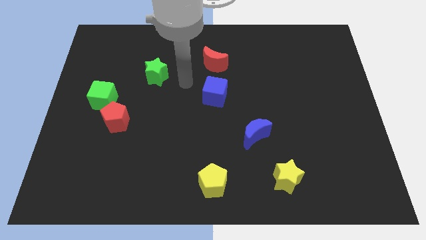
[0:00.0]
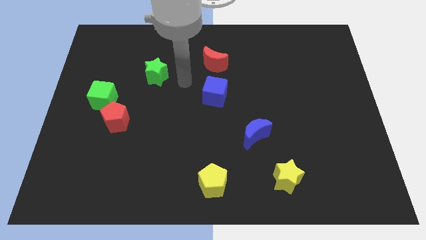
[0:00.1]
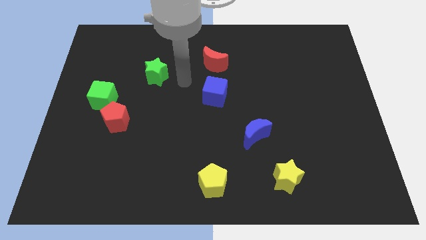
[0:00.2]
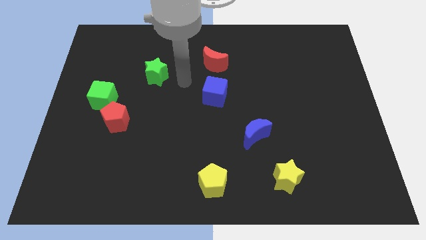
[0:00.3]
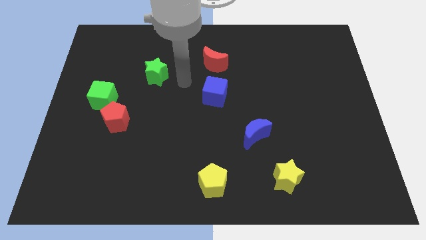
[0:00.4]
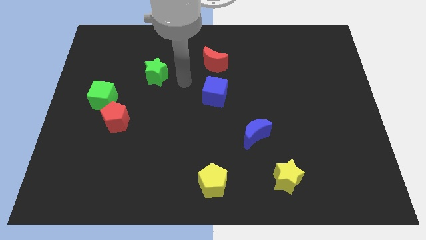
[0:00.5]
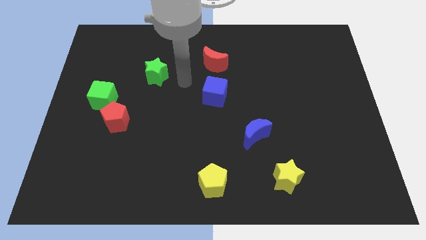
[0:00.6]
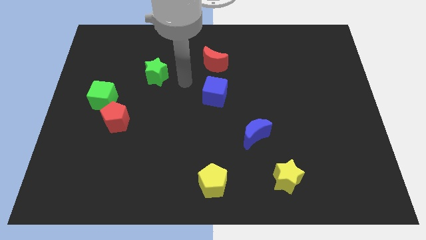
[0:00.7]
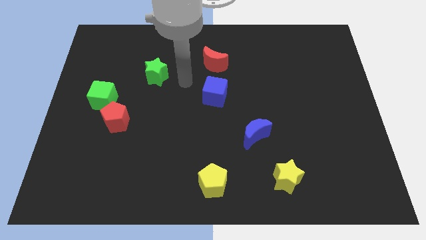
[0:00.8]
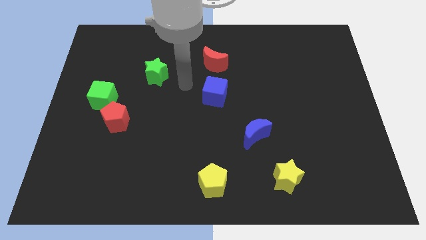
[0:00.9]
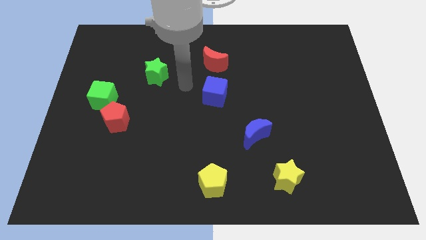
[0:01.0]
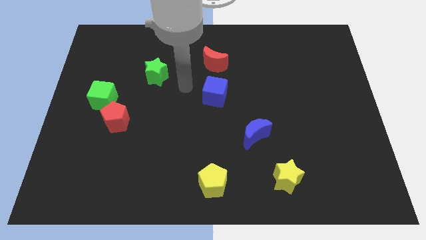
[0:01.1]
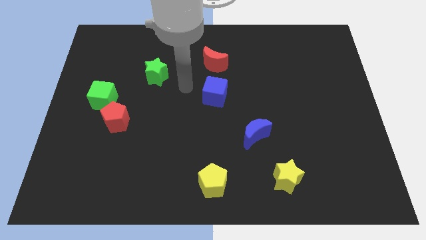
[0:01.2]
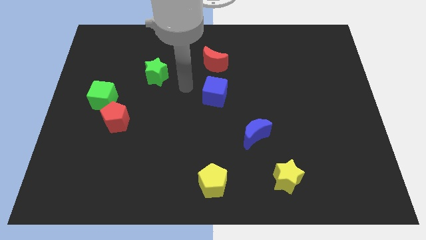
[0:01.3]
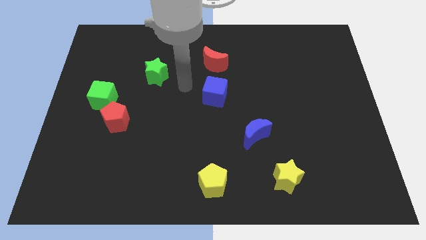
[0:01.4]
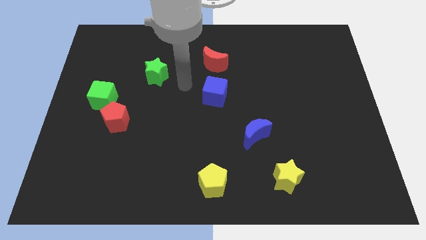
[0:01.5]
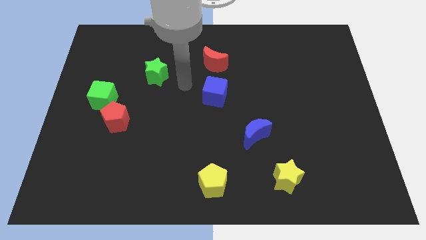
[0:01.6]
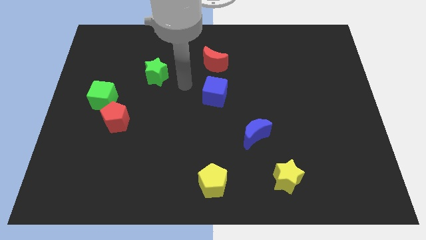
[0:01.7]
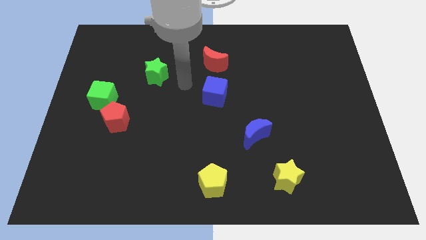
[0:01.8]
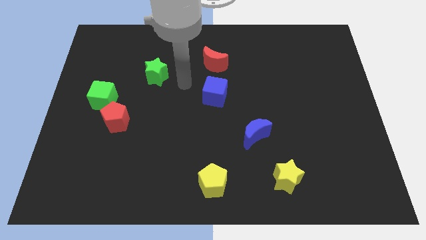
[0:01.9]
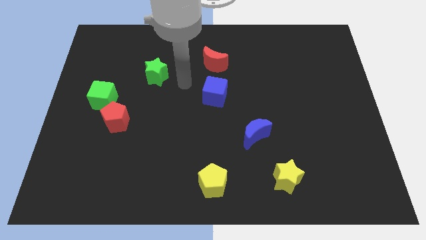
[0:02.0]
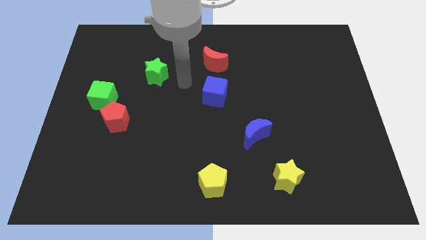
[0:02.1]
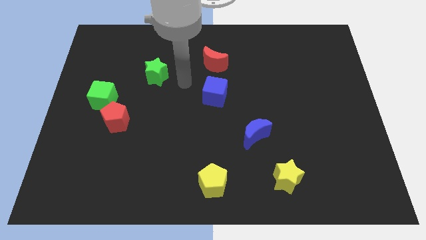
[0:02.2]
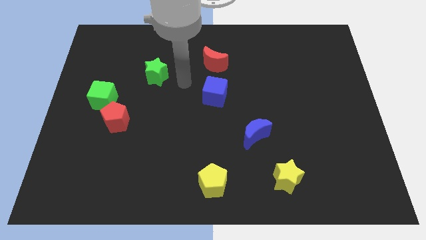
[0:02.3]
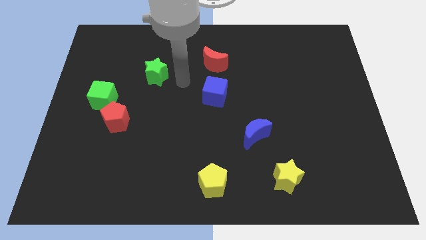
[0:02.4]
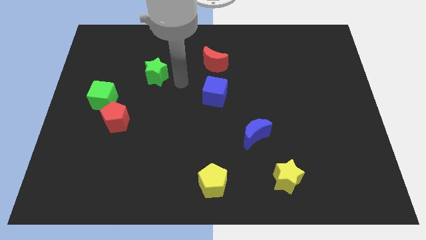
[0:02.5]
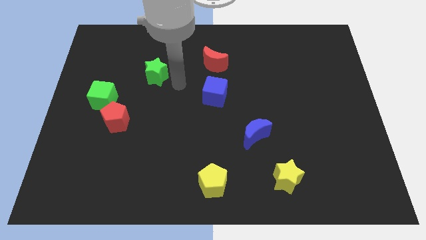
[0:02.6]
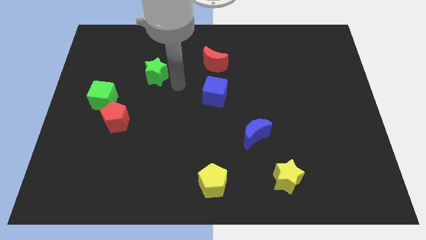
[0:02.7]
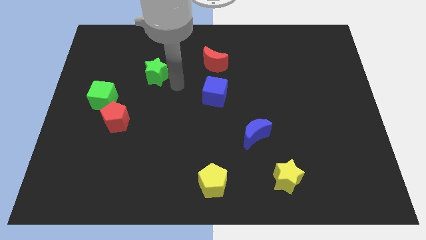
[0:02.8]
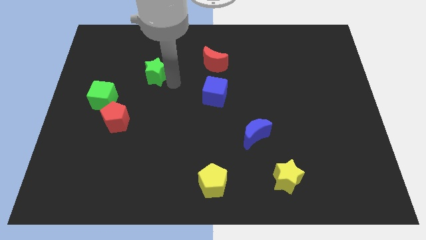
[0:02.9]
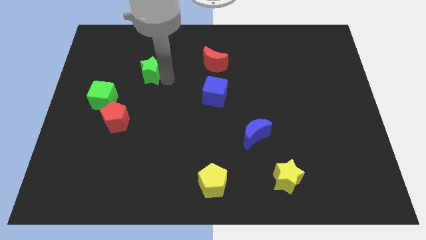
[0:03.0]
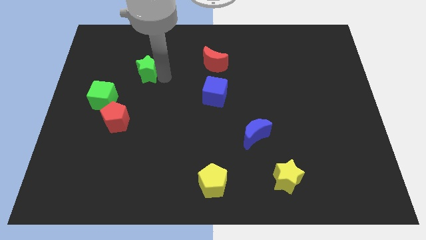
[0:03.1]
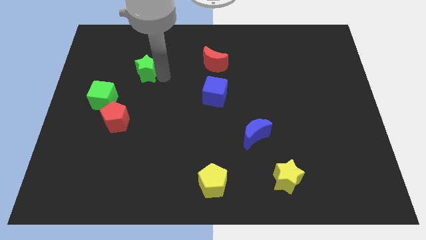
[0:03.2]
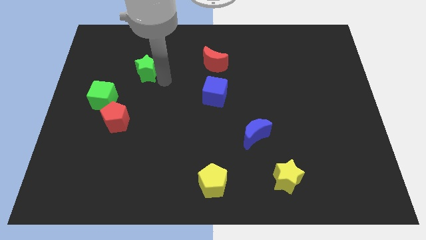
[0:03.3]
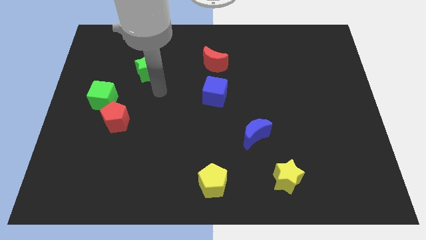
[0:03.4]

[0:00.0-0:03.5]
push the green star diagonally to the top right of the board

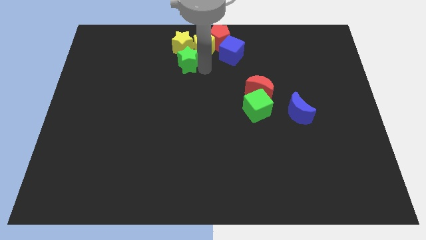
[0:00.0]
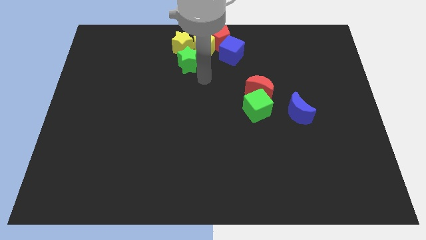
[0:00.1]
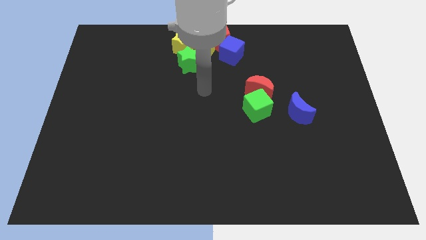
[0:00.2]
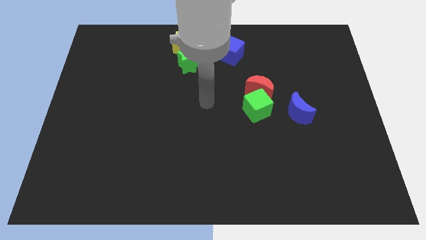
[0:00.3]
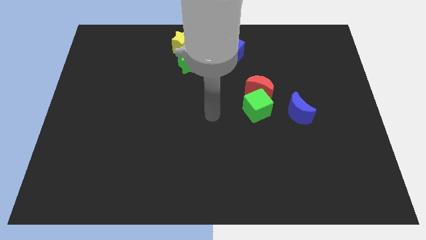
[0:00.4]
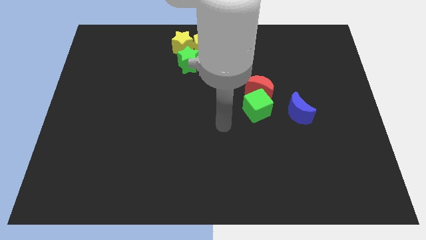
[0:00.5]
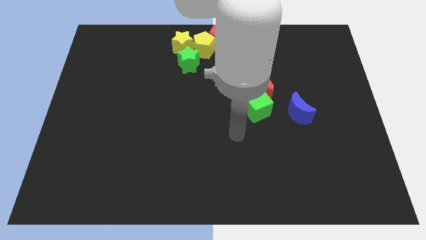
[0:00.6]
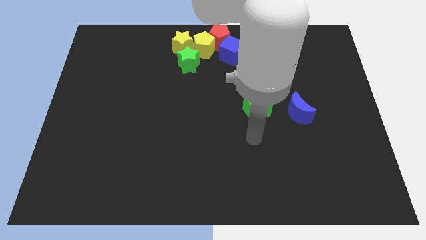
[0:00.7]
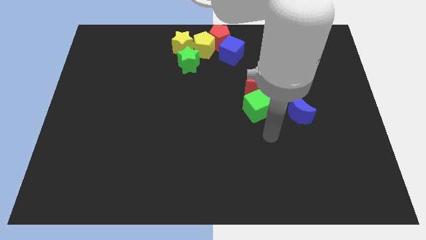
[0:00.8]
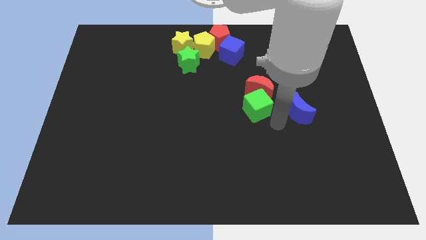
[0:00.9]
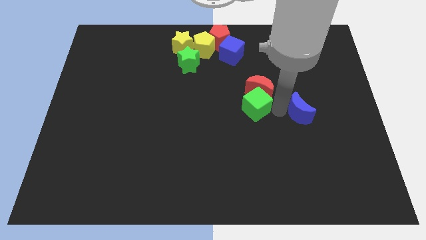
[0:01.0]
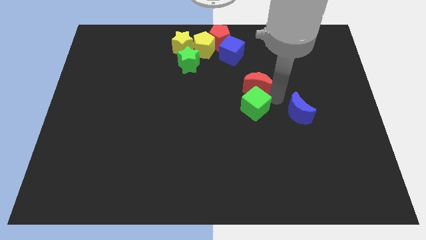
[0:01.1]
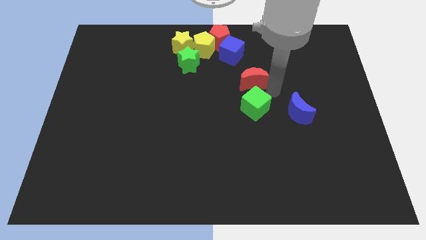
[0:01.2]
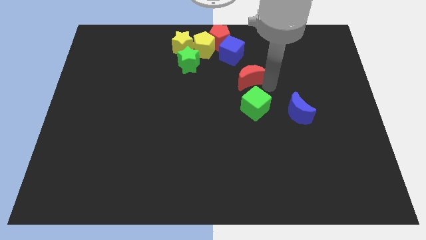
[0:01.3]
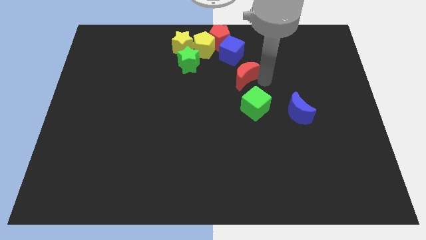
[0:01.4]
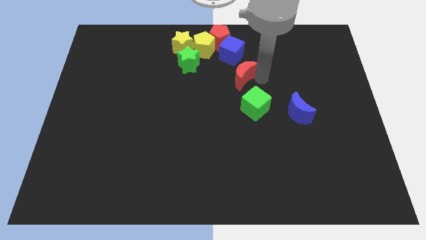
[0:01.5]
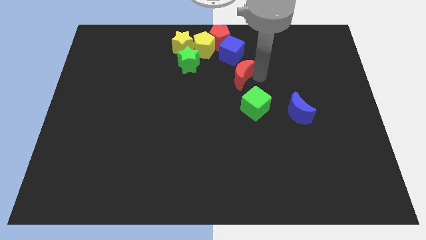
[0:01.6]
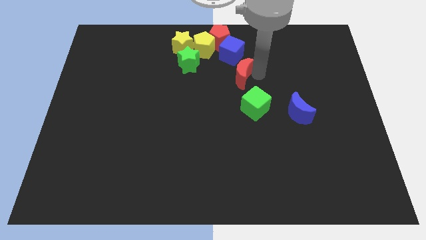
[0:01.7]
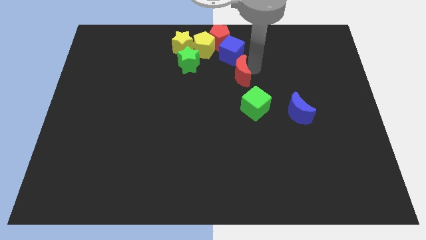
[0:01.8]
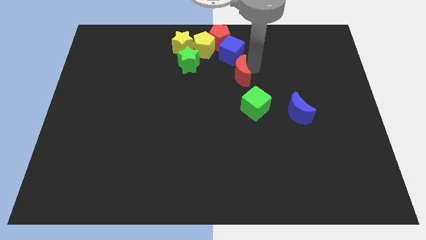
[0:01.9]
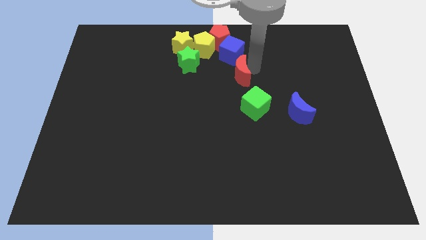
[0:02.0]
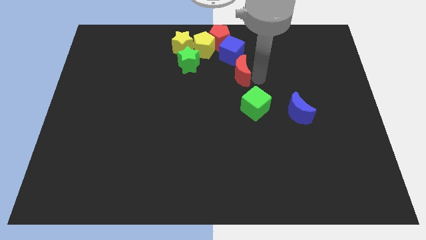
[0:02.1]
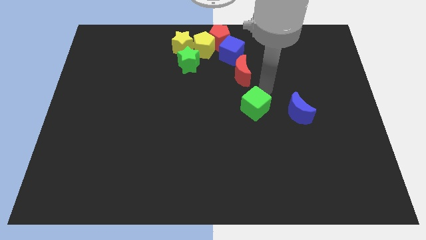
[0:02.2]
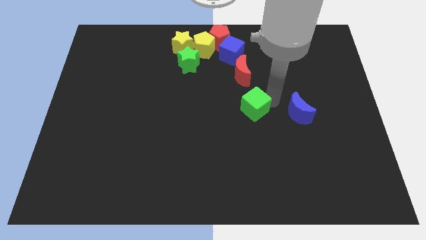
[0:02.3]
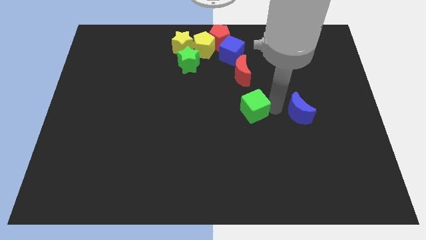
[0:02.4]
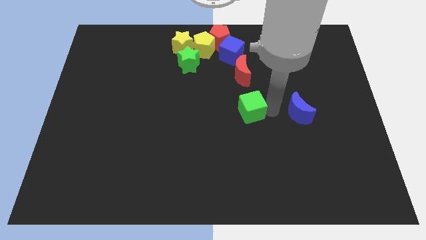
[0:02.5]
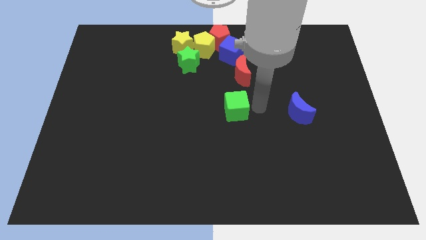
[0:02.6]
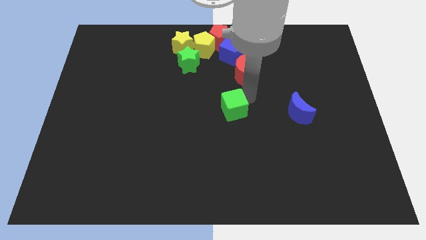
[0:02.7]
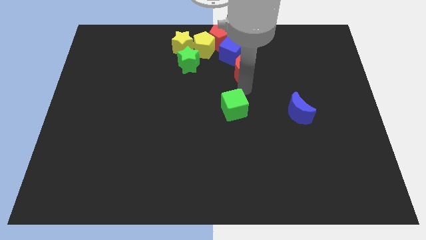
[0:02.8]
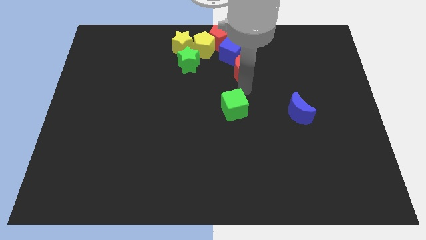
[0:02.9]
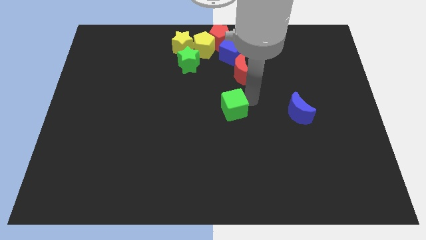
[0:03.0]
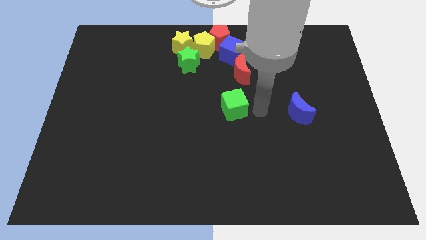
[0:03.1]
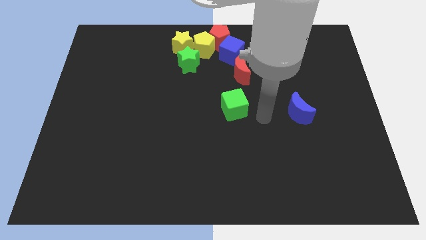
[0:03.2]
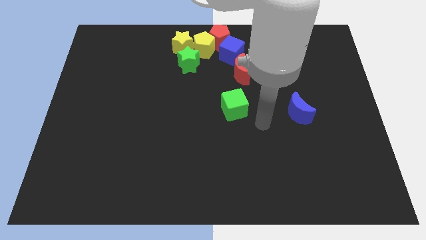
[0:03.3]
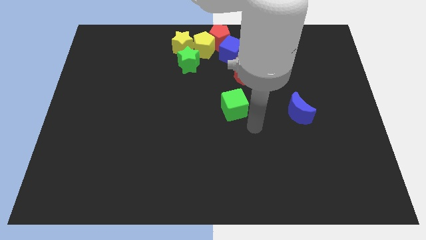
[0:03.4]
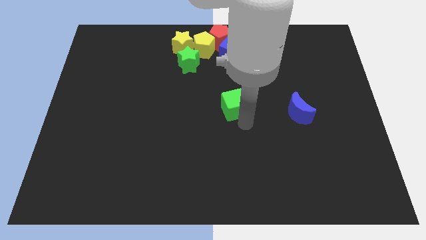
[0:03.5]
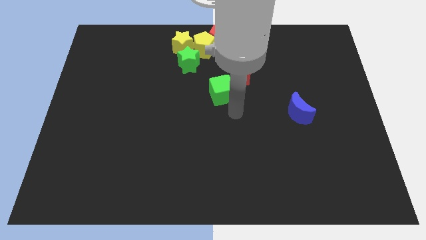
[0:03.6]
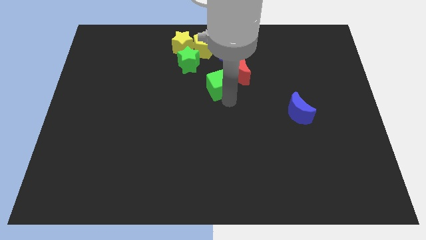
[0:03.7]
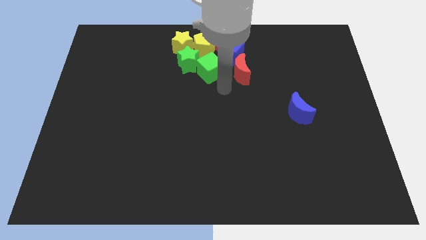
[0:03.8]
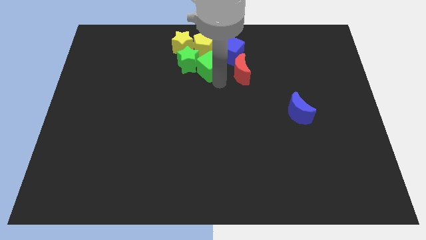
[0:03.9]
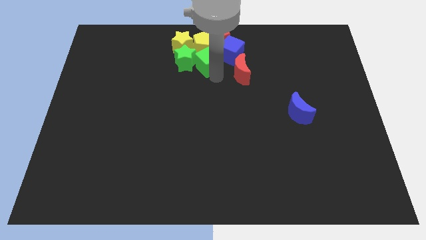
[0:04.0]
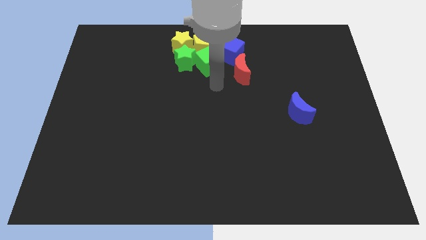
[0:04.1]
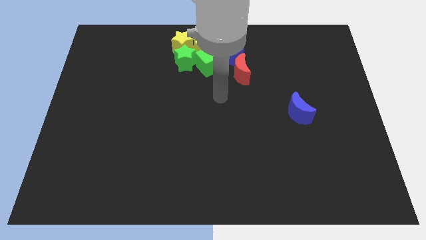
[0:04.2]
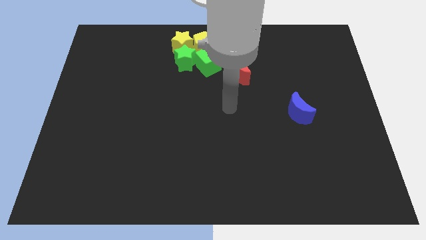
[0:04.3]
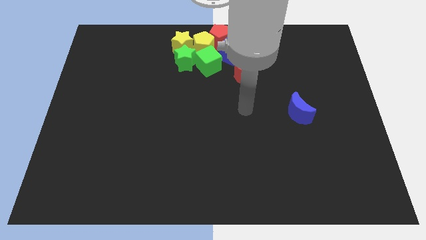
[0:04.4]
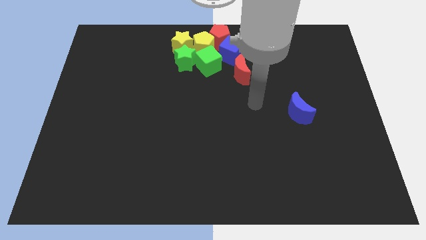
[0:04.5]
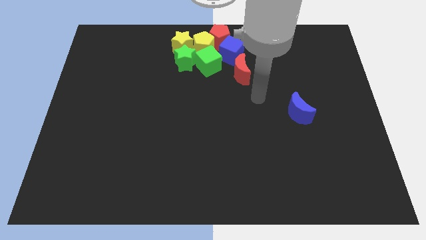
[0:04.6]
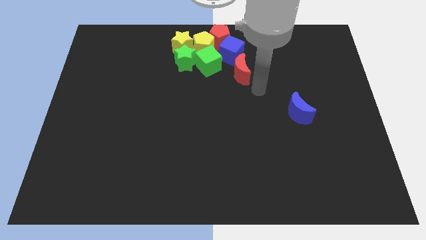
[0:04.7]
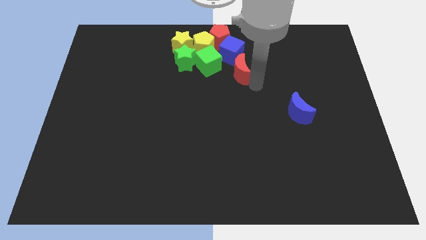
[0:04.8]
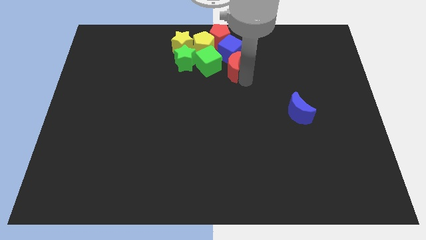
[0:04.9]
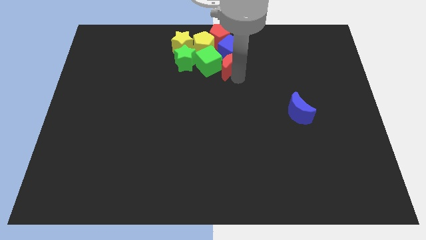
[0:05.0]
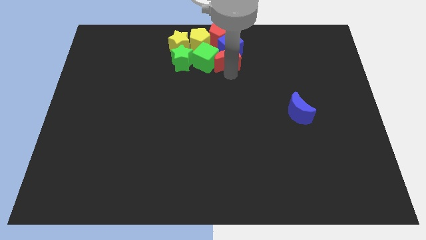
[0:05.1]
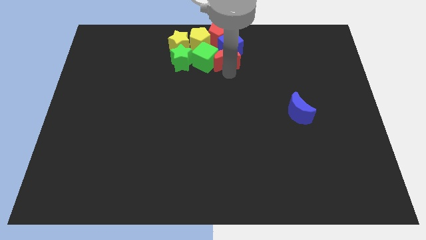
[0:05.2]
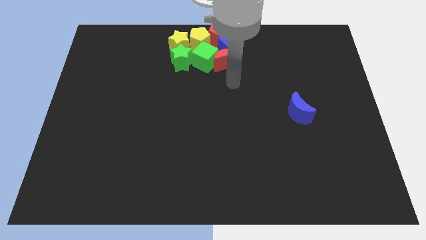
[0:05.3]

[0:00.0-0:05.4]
push the green star green cube and the red moon into the group of blocks

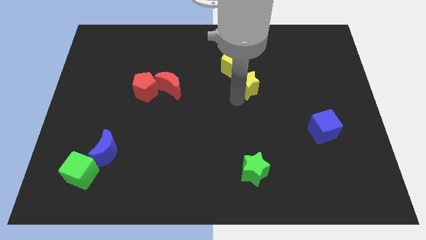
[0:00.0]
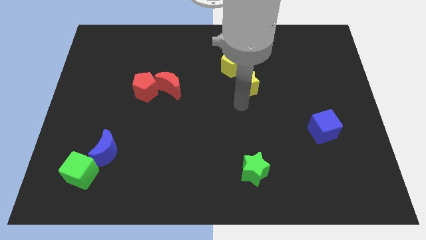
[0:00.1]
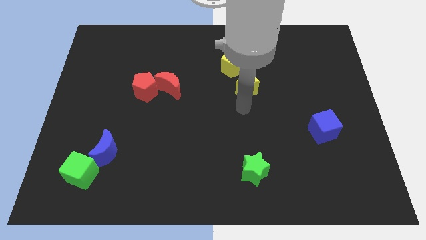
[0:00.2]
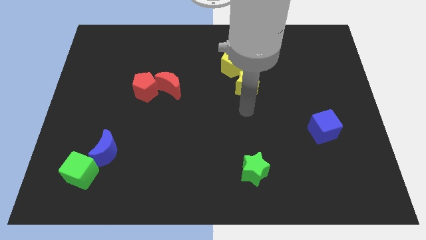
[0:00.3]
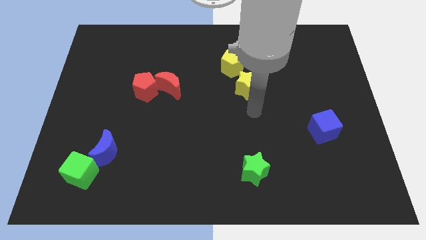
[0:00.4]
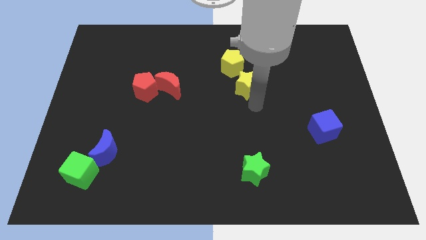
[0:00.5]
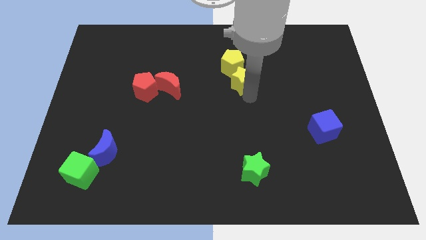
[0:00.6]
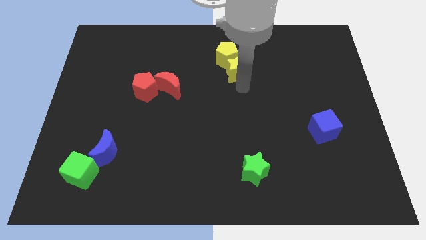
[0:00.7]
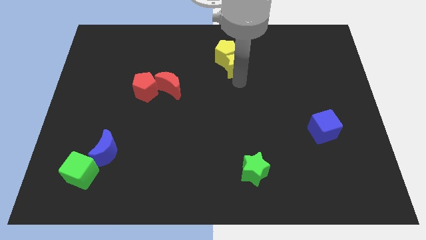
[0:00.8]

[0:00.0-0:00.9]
push the yellow star into the yellow pentagon
